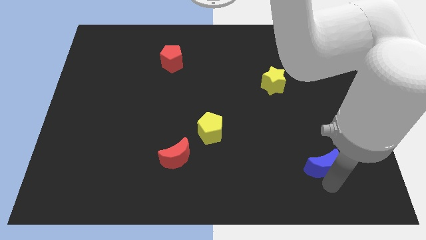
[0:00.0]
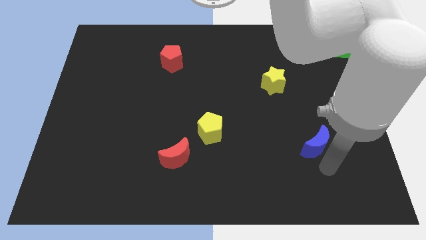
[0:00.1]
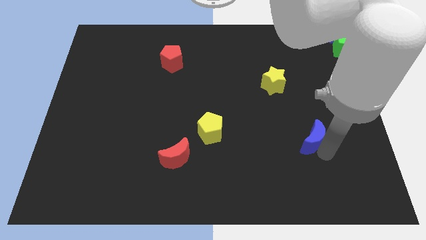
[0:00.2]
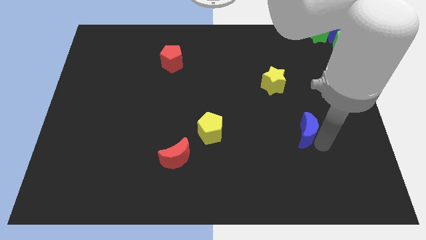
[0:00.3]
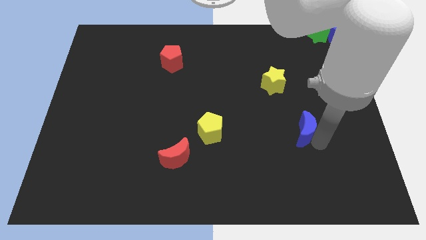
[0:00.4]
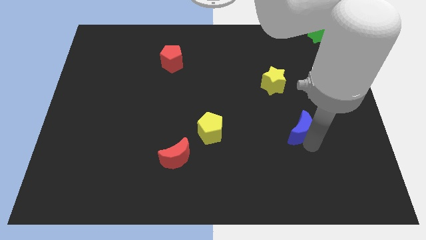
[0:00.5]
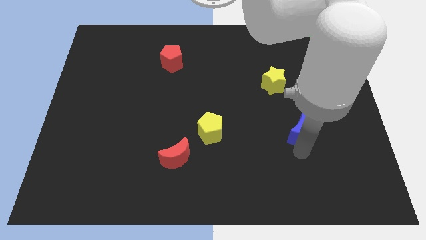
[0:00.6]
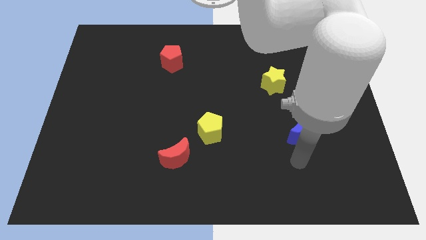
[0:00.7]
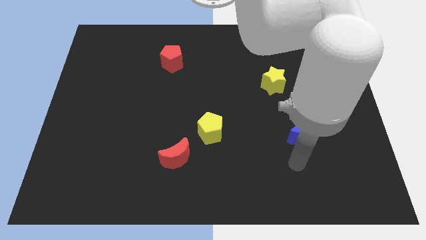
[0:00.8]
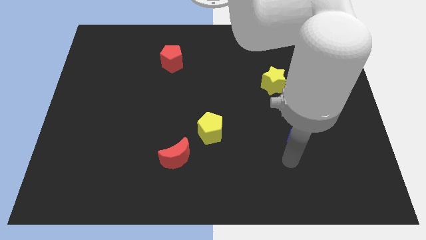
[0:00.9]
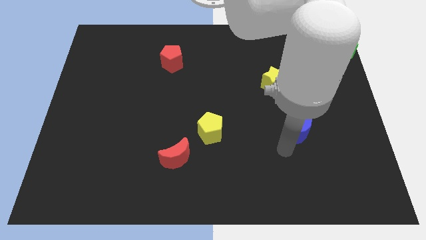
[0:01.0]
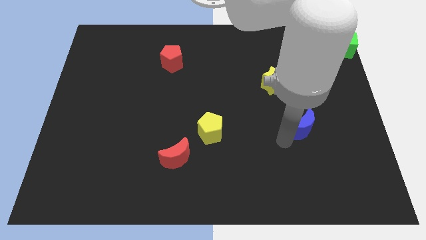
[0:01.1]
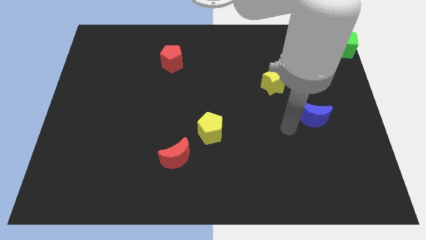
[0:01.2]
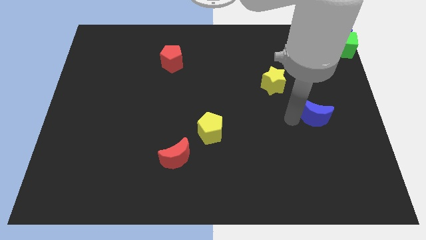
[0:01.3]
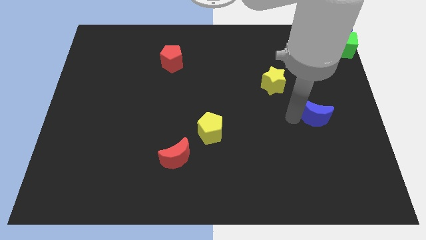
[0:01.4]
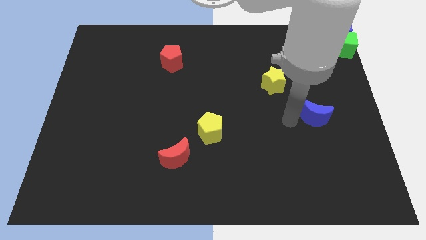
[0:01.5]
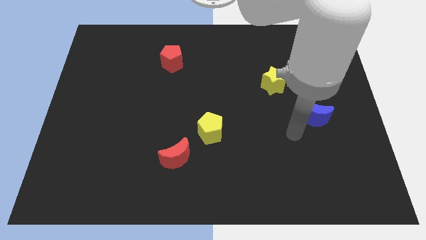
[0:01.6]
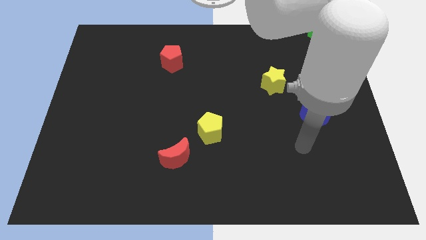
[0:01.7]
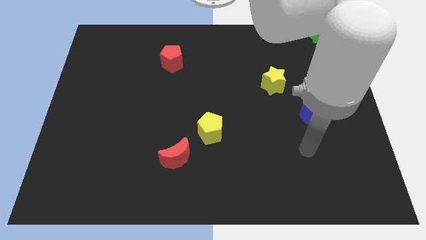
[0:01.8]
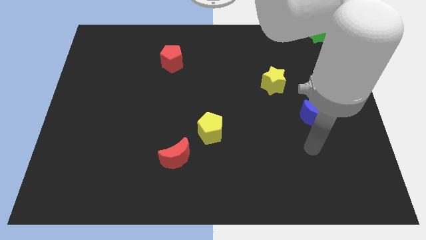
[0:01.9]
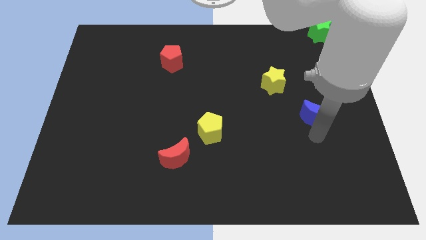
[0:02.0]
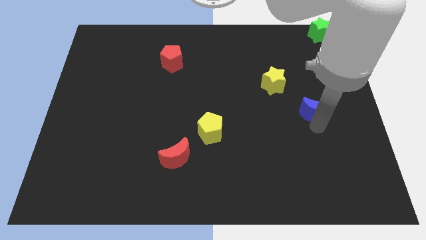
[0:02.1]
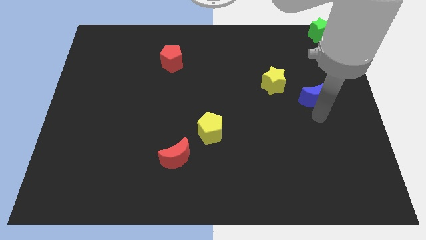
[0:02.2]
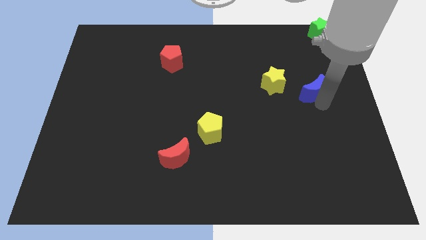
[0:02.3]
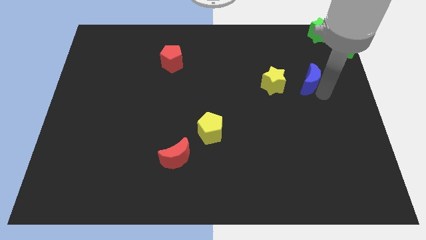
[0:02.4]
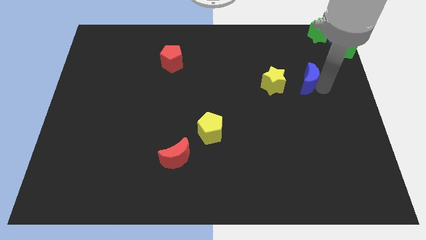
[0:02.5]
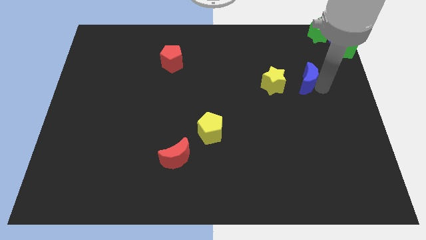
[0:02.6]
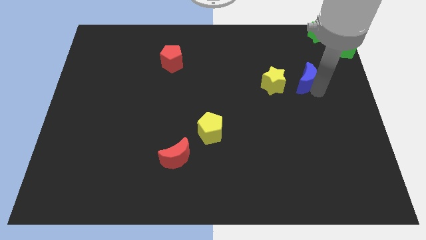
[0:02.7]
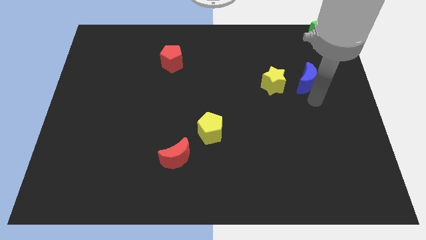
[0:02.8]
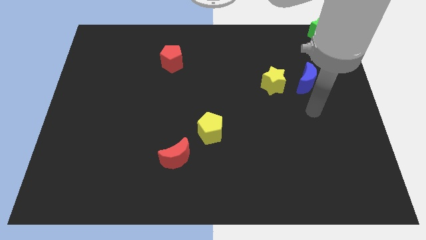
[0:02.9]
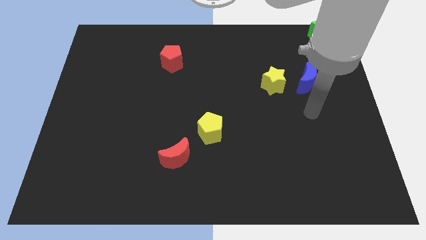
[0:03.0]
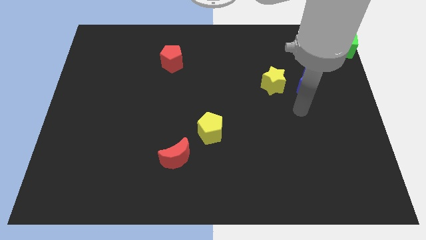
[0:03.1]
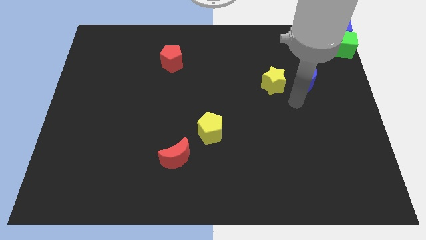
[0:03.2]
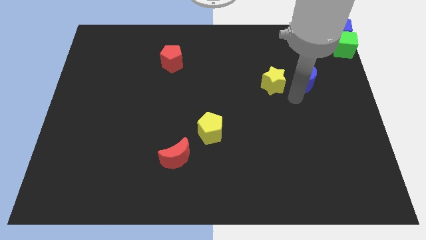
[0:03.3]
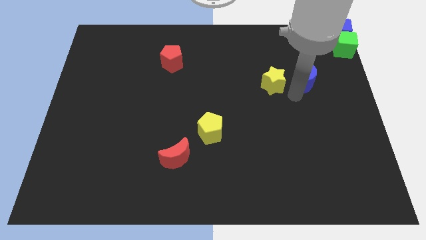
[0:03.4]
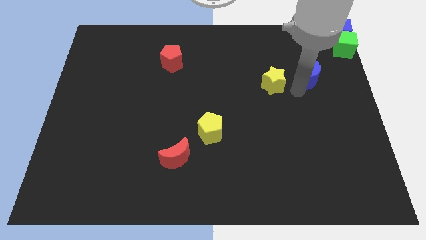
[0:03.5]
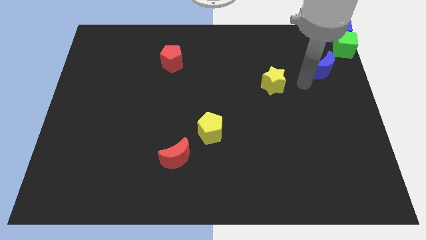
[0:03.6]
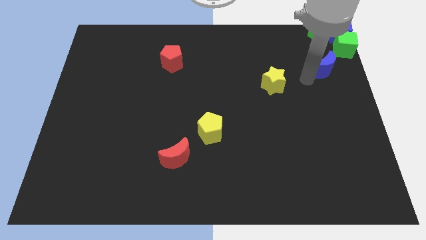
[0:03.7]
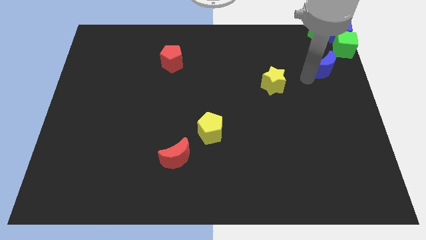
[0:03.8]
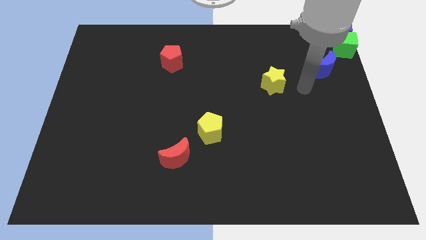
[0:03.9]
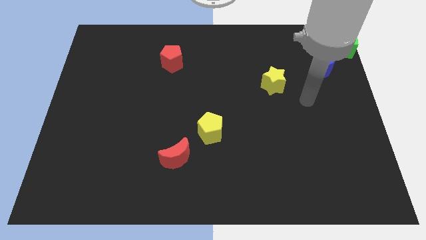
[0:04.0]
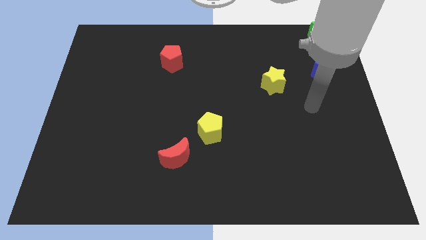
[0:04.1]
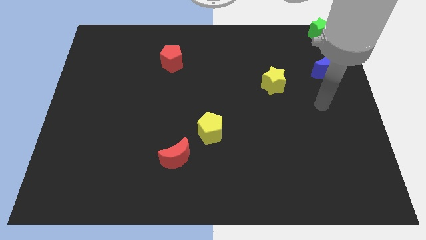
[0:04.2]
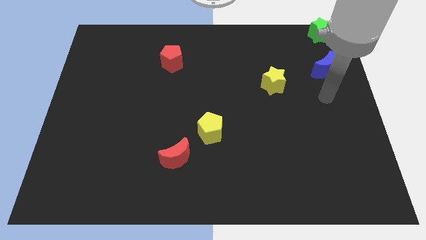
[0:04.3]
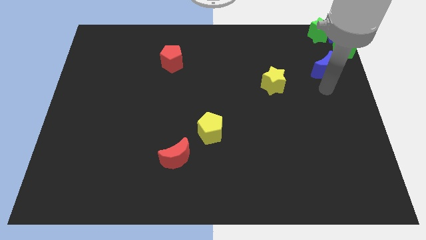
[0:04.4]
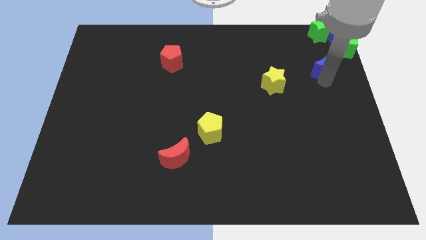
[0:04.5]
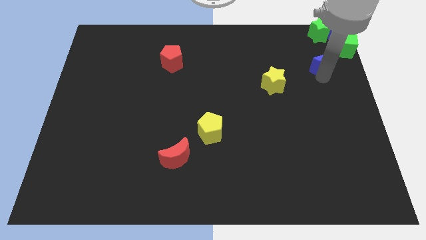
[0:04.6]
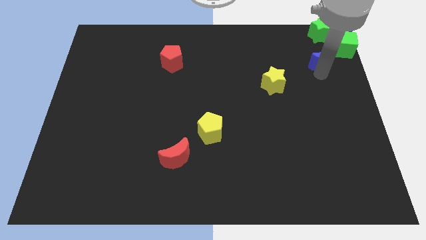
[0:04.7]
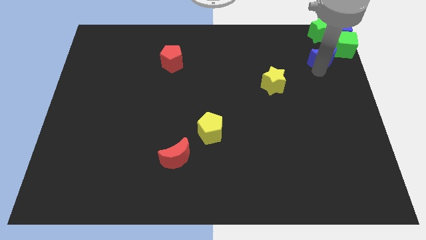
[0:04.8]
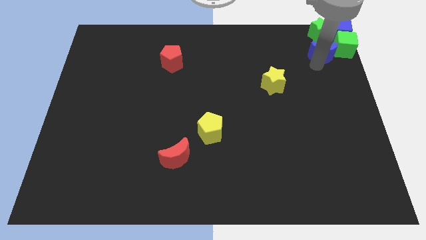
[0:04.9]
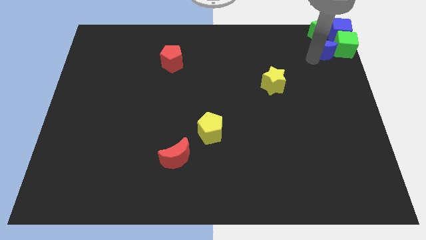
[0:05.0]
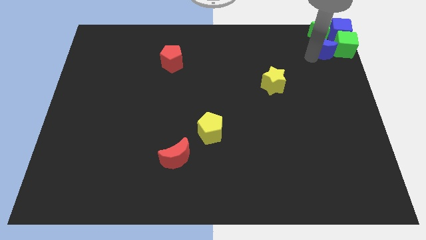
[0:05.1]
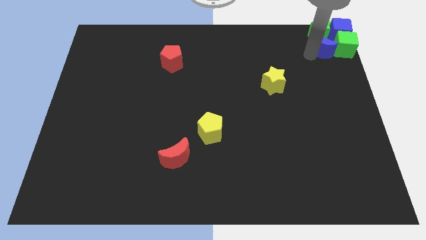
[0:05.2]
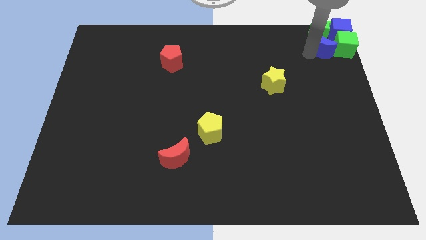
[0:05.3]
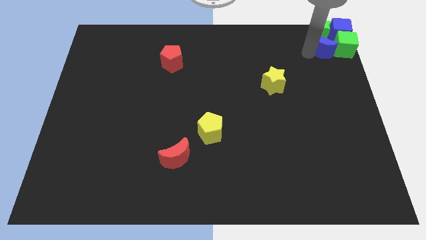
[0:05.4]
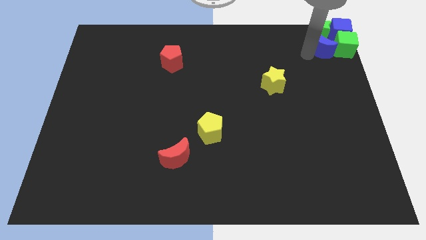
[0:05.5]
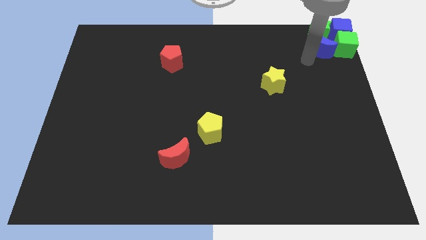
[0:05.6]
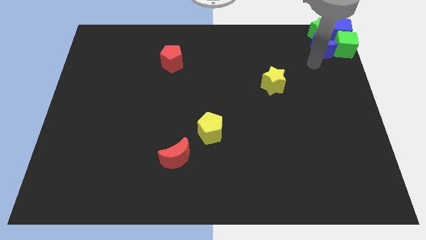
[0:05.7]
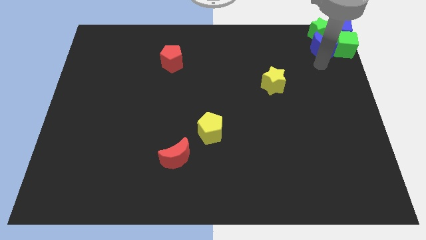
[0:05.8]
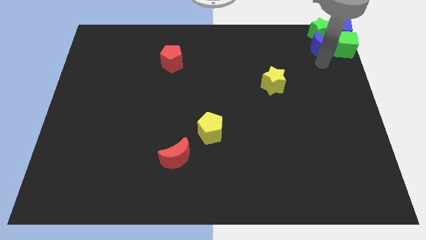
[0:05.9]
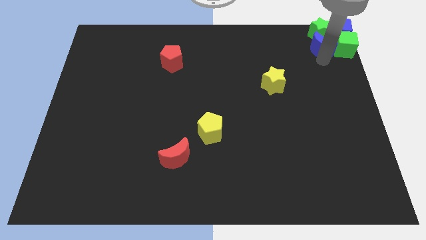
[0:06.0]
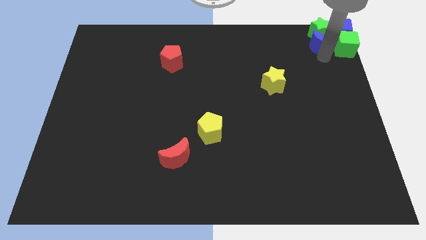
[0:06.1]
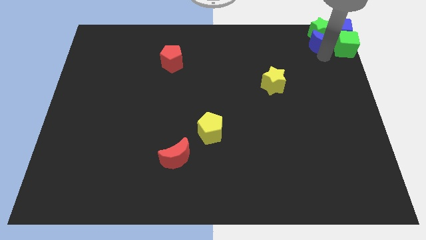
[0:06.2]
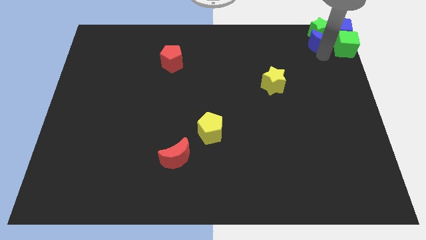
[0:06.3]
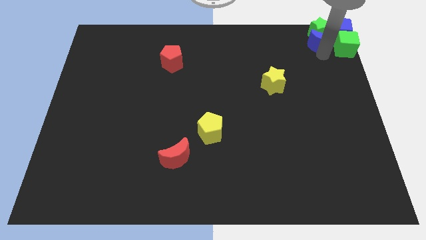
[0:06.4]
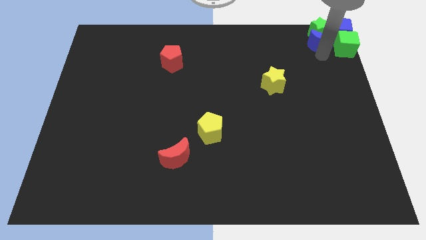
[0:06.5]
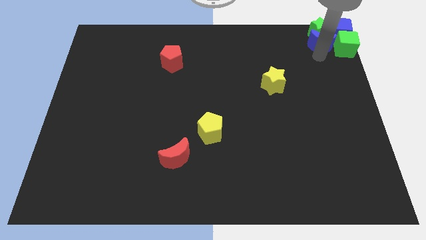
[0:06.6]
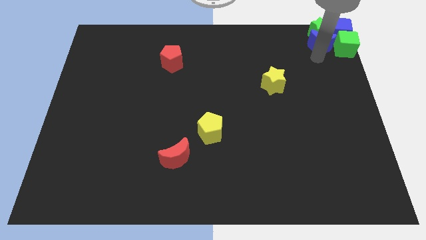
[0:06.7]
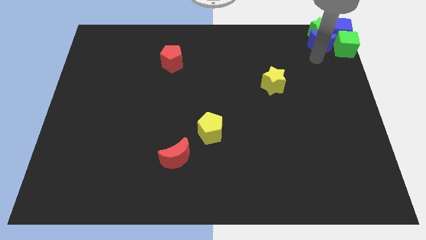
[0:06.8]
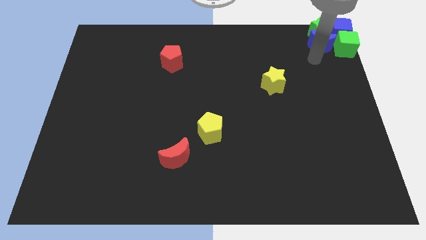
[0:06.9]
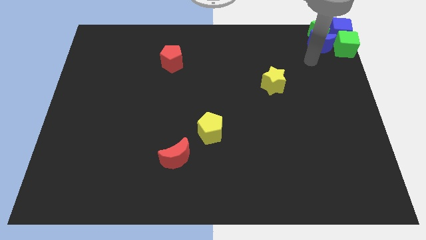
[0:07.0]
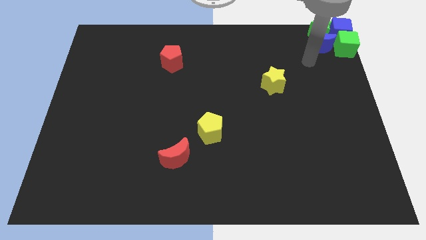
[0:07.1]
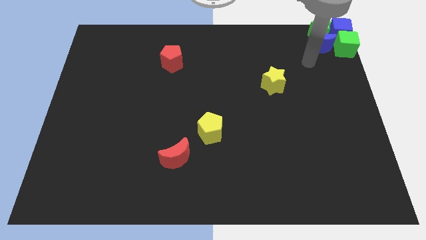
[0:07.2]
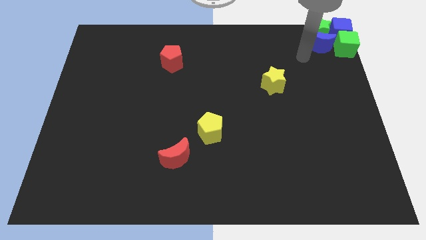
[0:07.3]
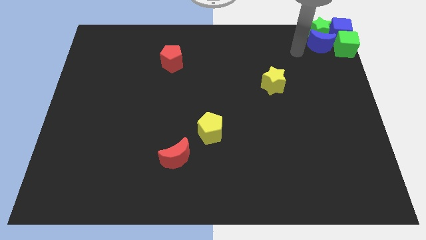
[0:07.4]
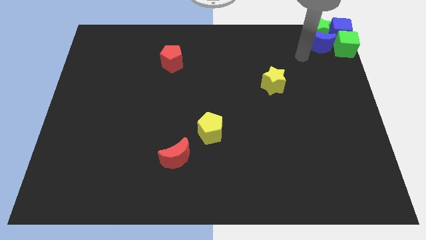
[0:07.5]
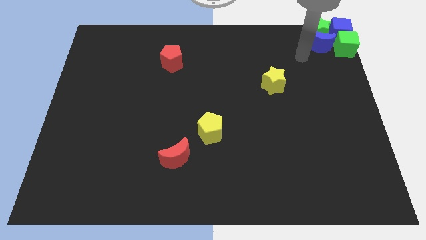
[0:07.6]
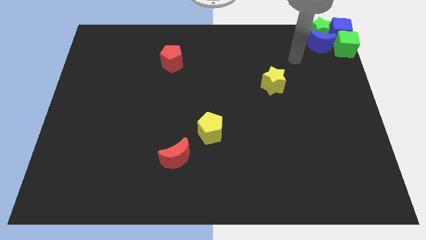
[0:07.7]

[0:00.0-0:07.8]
move blue crescent into green star

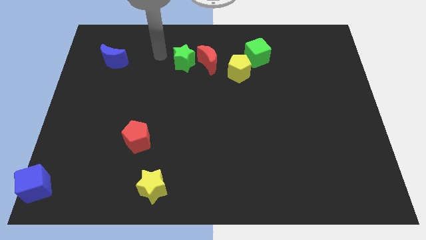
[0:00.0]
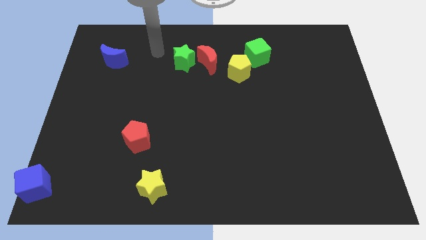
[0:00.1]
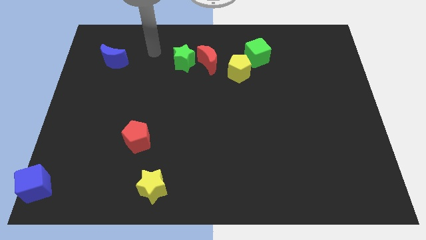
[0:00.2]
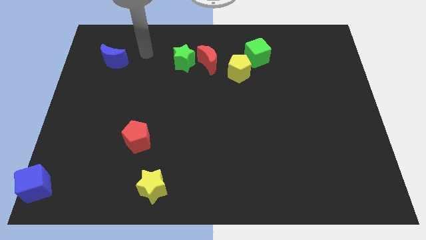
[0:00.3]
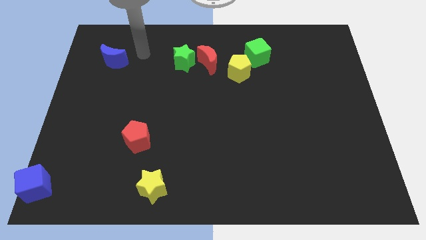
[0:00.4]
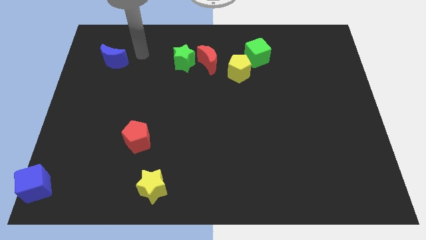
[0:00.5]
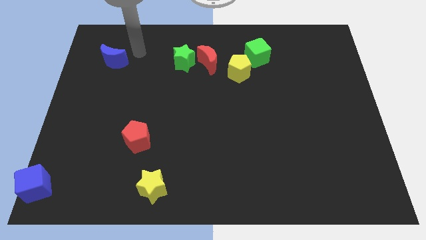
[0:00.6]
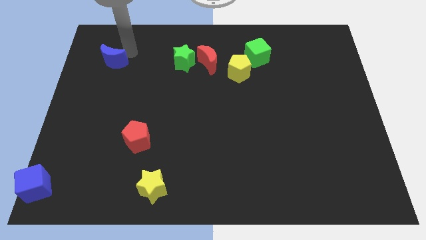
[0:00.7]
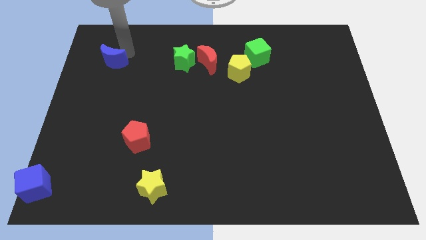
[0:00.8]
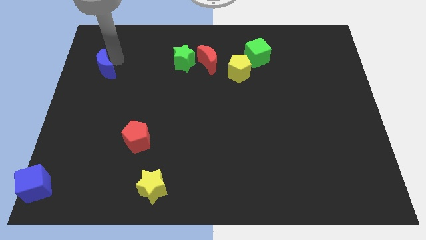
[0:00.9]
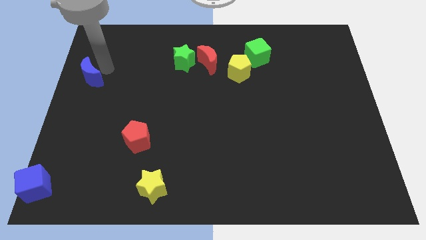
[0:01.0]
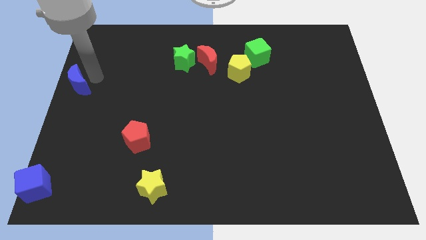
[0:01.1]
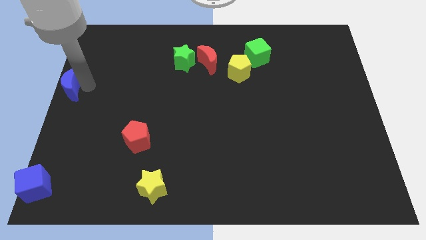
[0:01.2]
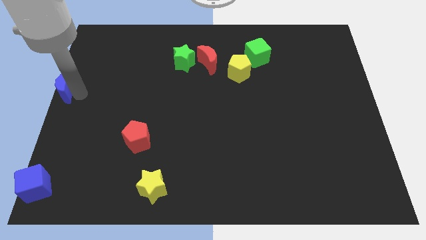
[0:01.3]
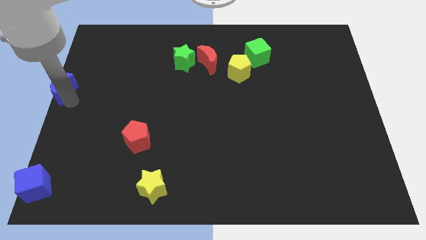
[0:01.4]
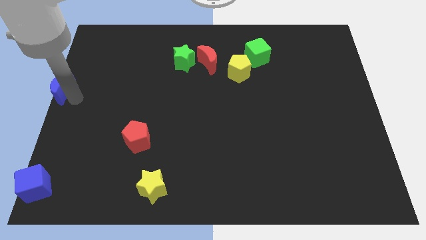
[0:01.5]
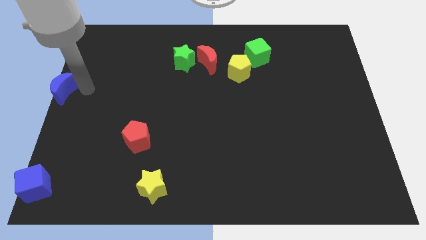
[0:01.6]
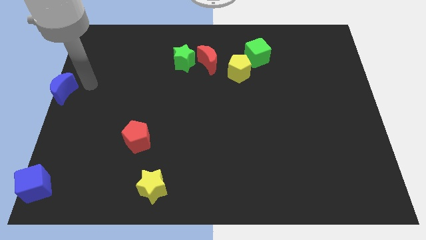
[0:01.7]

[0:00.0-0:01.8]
push the blue cube to the center left corner of the board
